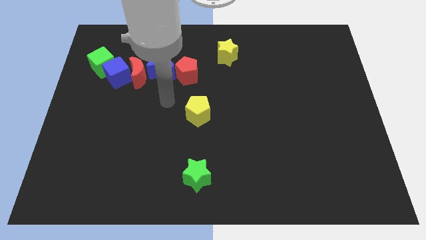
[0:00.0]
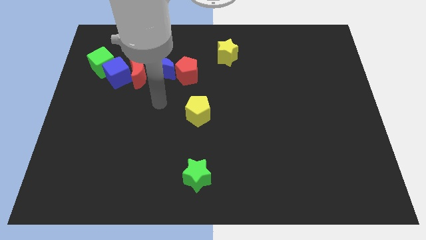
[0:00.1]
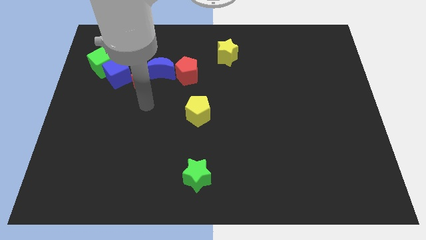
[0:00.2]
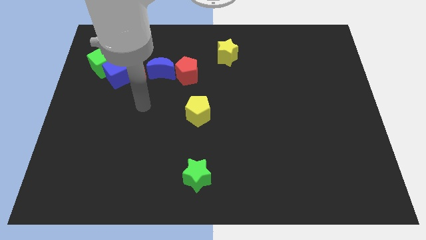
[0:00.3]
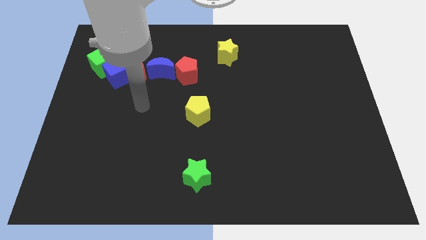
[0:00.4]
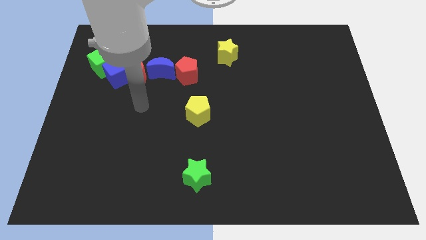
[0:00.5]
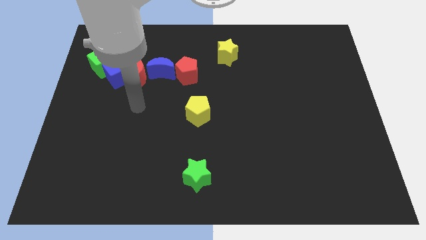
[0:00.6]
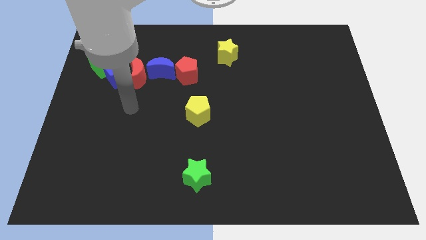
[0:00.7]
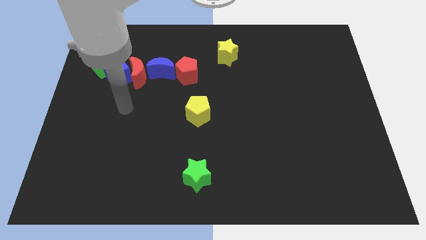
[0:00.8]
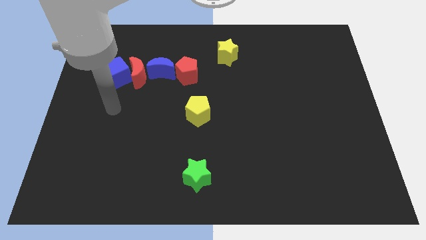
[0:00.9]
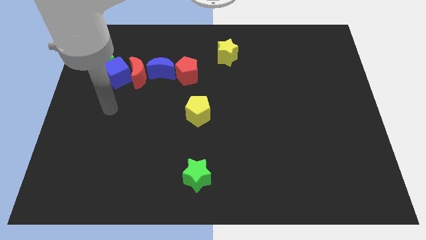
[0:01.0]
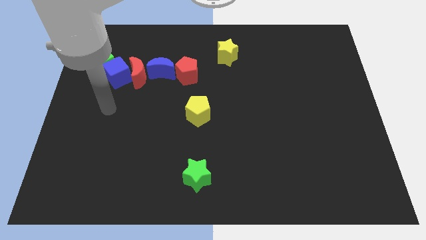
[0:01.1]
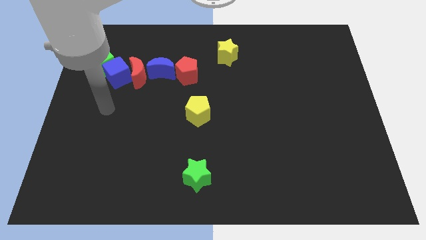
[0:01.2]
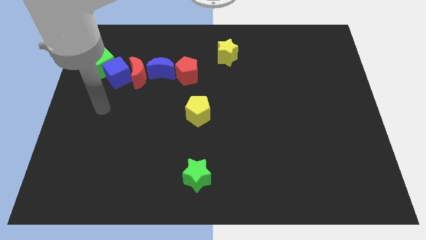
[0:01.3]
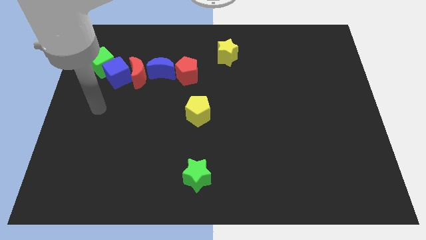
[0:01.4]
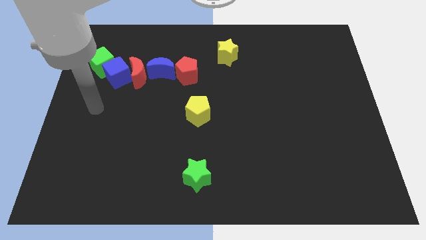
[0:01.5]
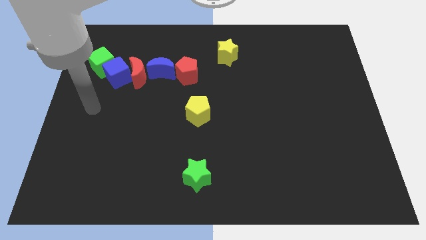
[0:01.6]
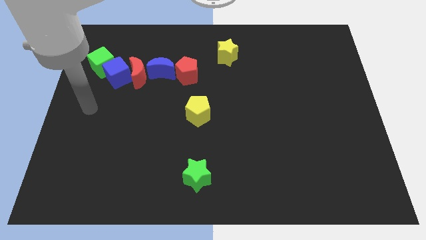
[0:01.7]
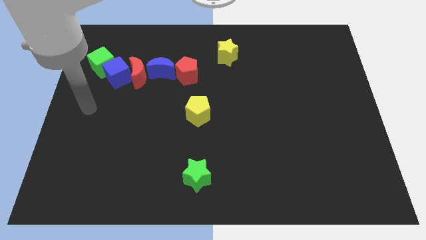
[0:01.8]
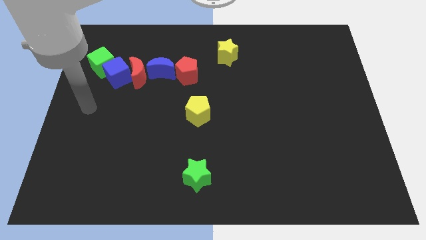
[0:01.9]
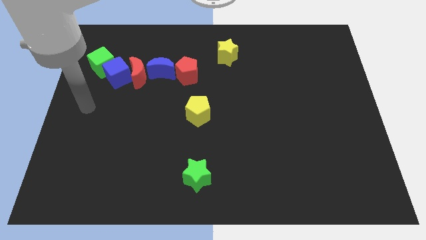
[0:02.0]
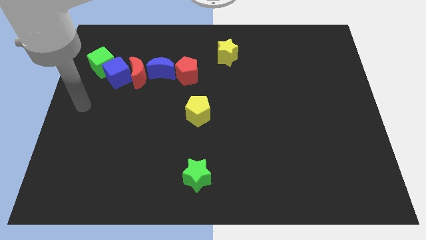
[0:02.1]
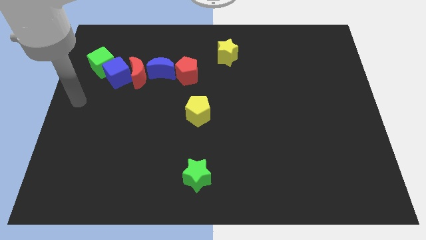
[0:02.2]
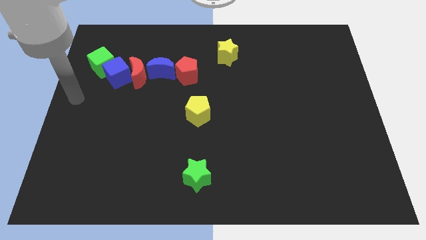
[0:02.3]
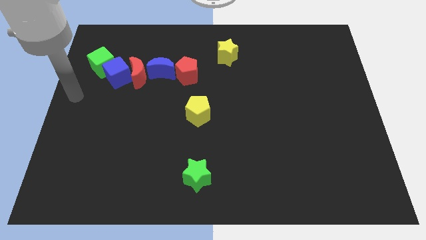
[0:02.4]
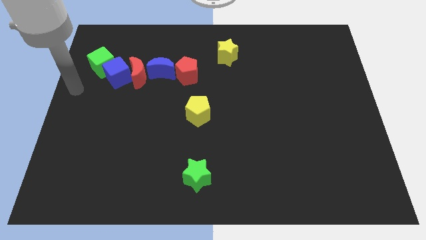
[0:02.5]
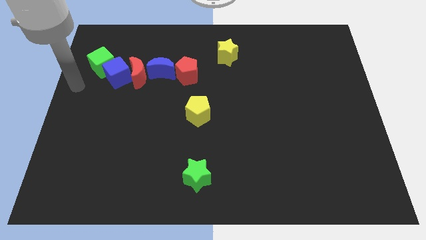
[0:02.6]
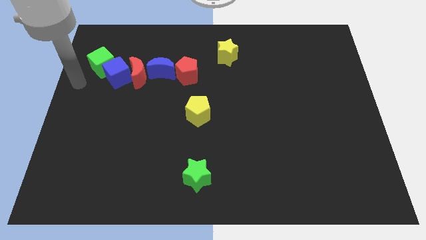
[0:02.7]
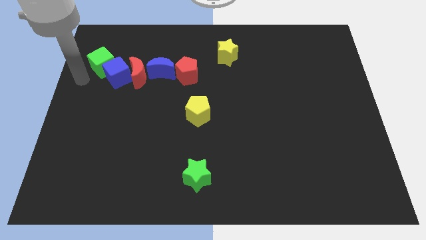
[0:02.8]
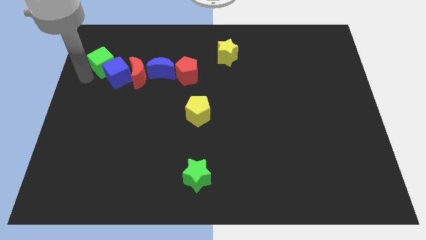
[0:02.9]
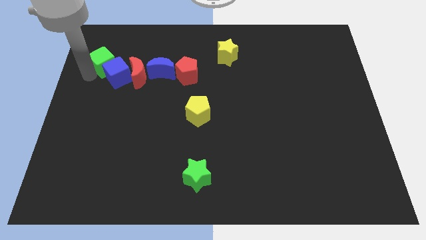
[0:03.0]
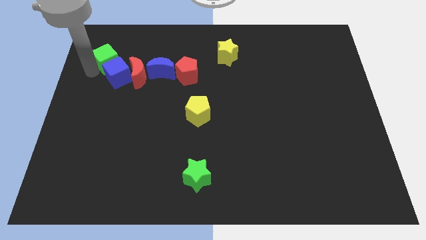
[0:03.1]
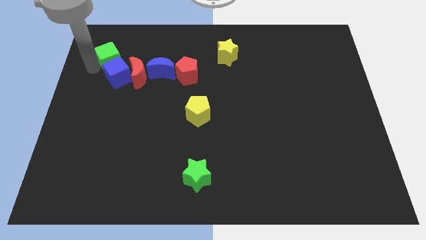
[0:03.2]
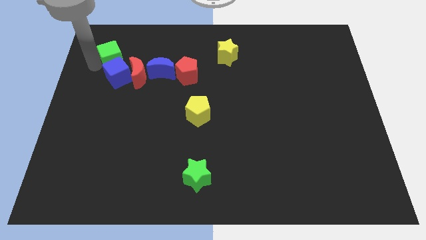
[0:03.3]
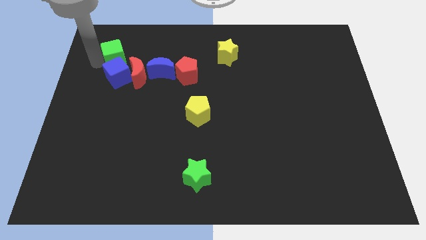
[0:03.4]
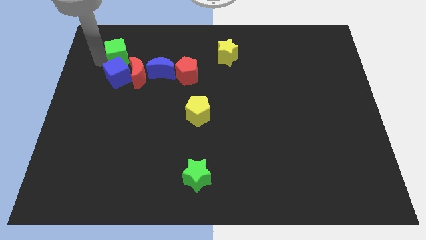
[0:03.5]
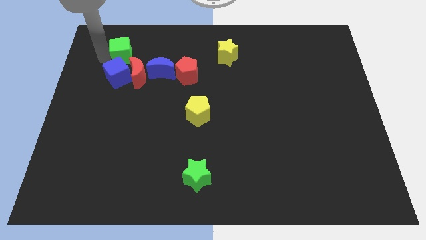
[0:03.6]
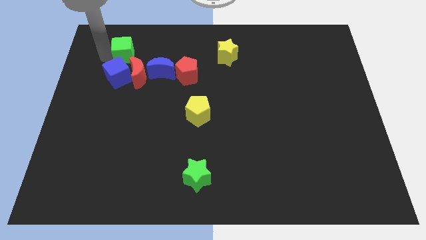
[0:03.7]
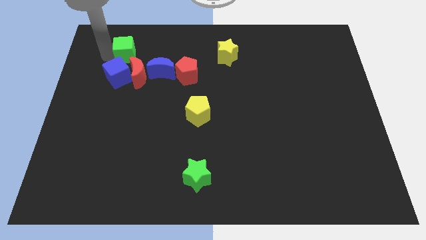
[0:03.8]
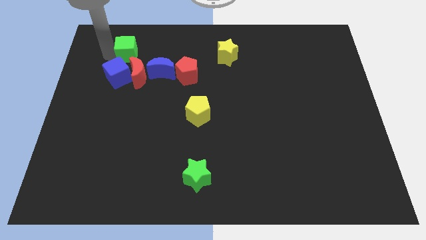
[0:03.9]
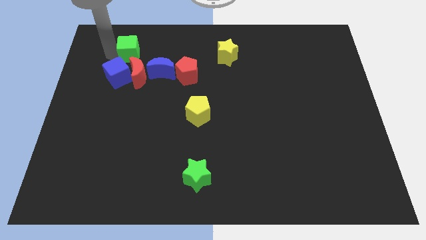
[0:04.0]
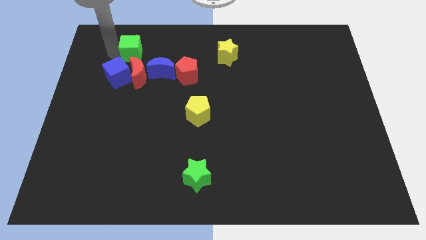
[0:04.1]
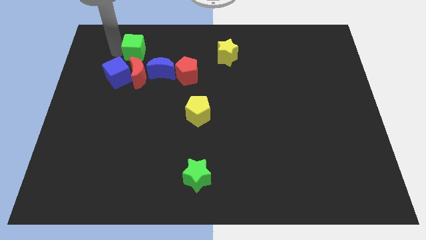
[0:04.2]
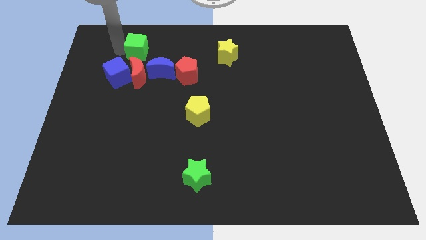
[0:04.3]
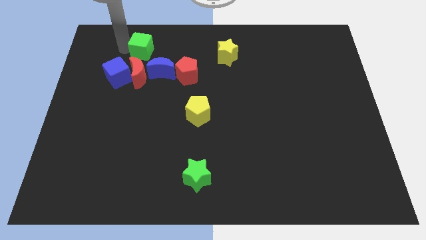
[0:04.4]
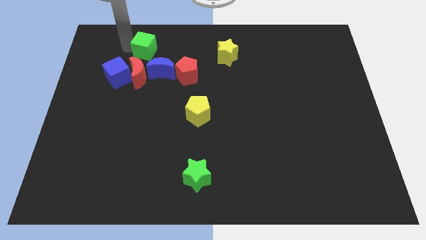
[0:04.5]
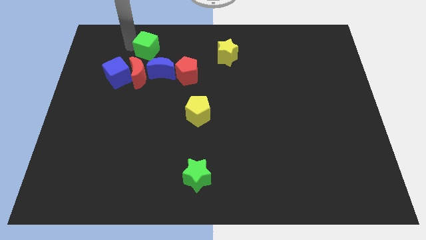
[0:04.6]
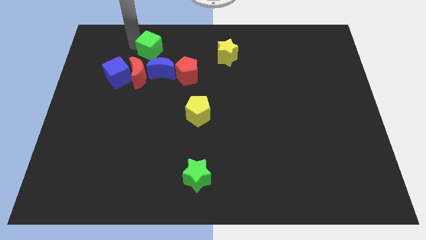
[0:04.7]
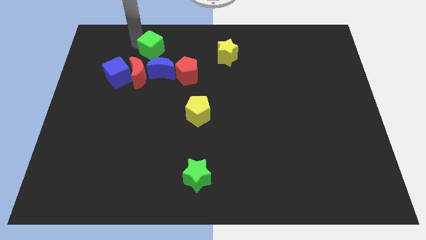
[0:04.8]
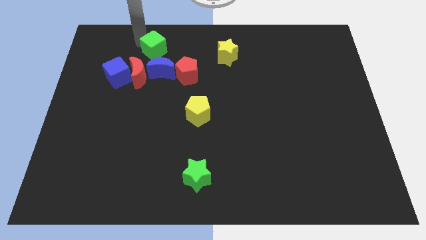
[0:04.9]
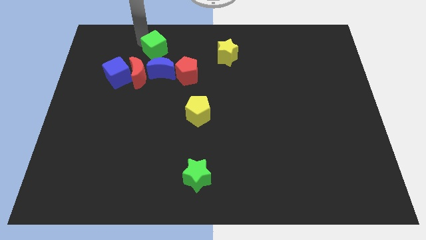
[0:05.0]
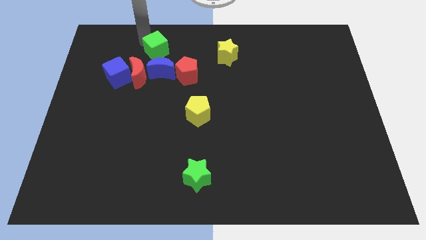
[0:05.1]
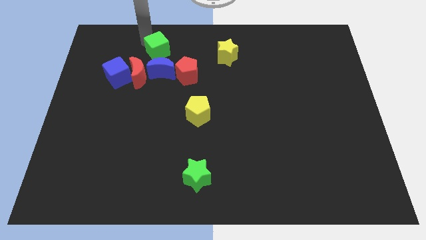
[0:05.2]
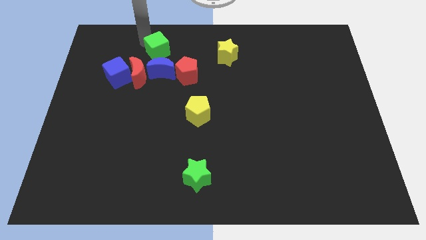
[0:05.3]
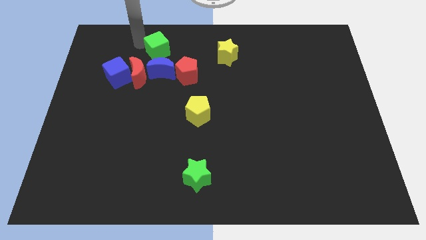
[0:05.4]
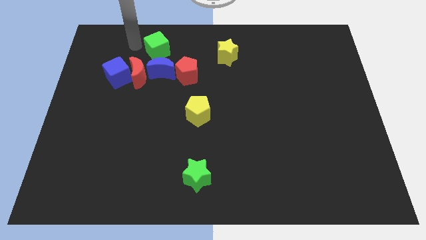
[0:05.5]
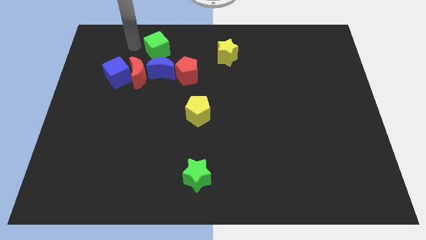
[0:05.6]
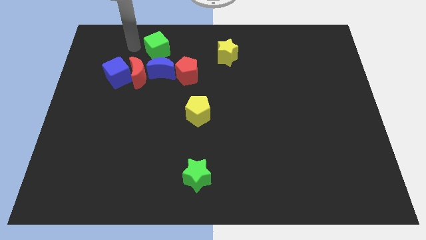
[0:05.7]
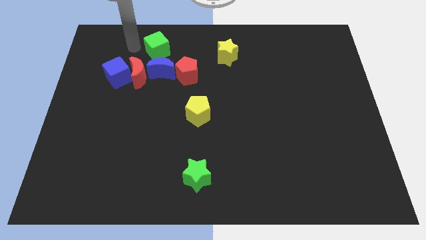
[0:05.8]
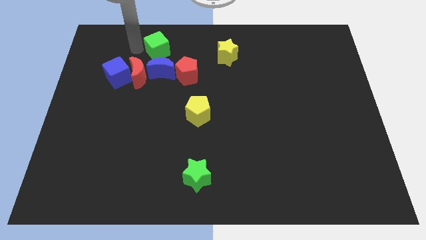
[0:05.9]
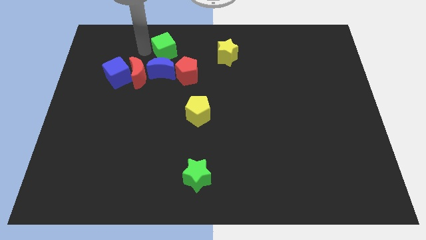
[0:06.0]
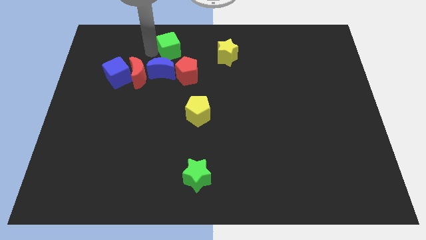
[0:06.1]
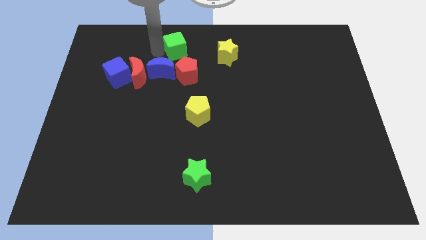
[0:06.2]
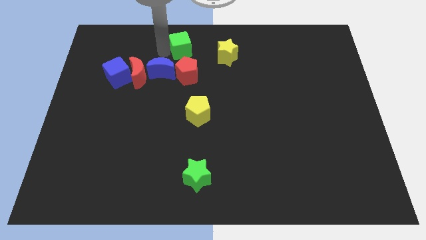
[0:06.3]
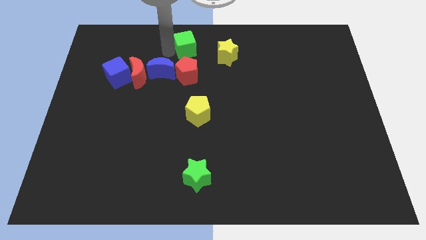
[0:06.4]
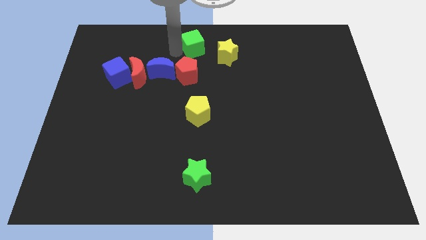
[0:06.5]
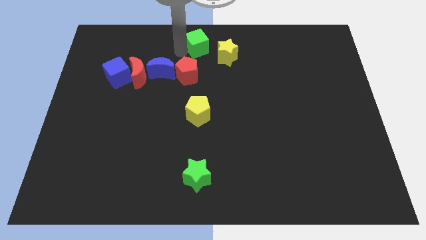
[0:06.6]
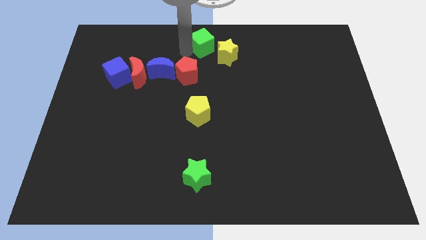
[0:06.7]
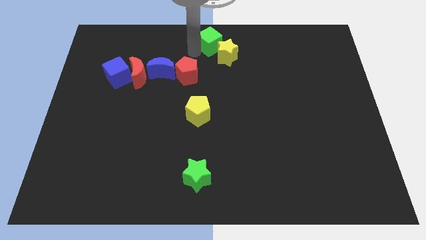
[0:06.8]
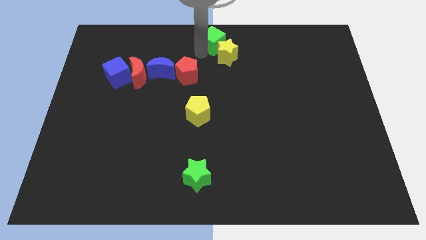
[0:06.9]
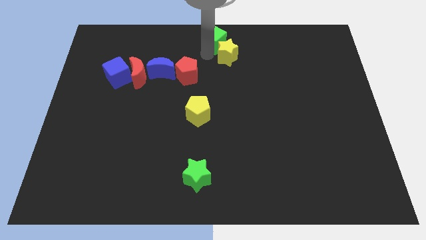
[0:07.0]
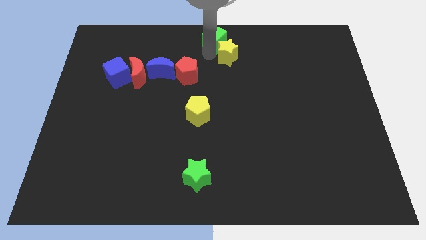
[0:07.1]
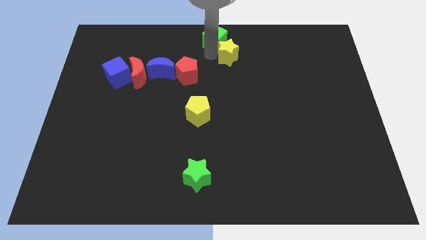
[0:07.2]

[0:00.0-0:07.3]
slide the green cube towards the top center

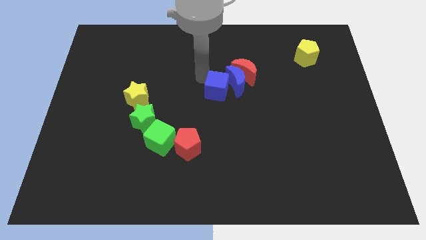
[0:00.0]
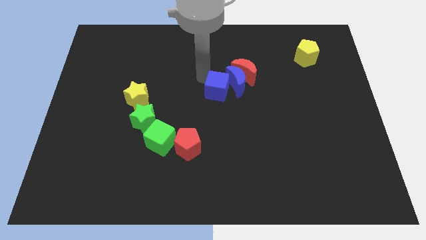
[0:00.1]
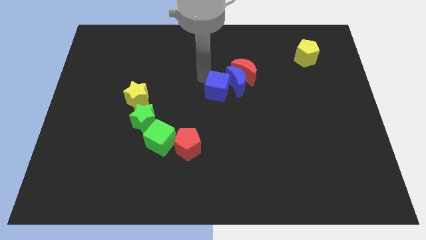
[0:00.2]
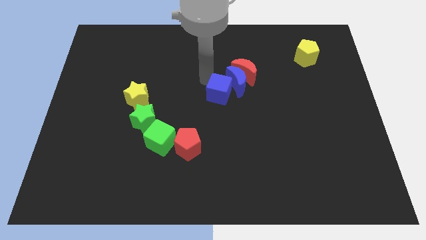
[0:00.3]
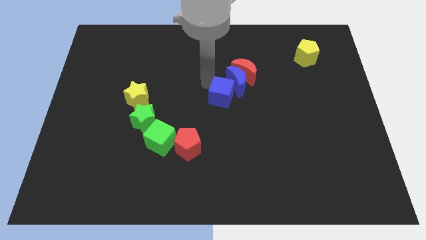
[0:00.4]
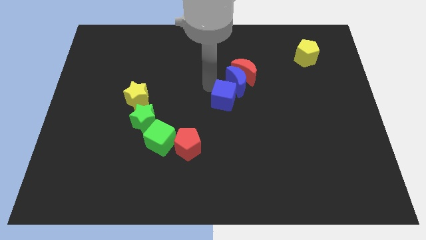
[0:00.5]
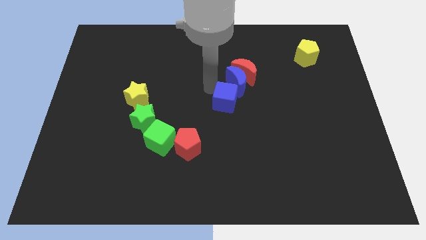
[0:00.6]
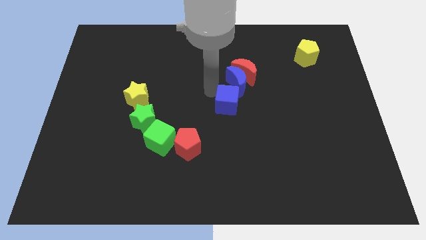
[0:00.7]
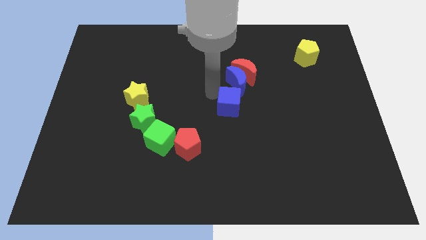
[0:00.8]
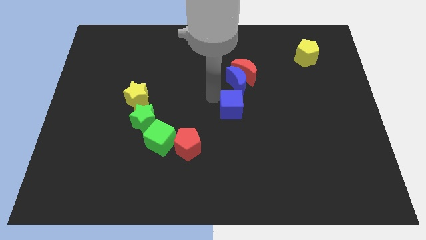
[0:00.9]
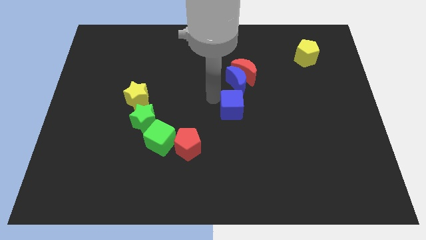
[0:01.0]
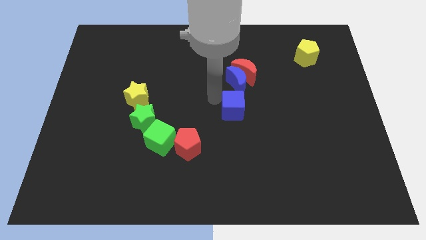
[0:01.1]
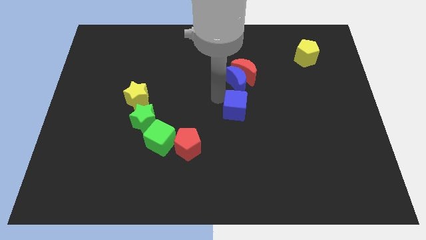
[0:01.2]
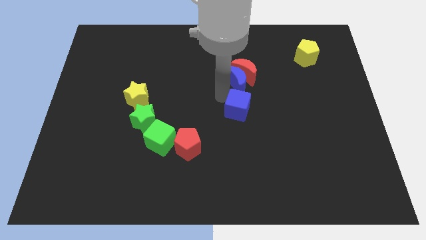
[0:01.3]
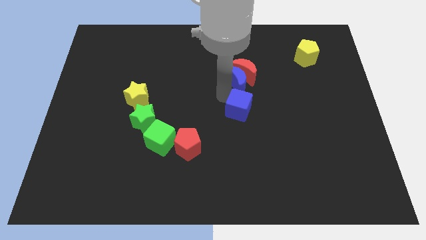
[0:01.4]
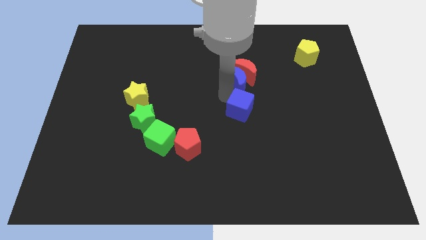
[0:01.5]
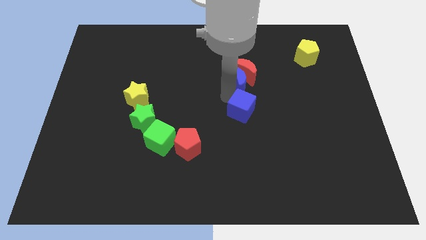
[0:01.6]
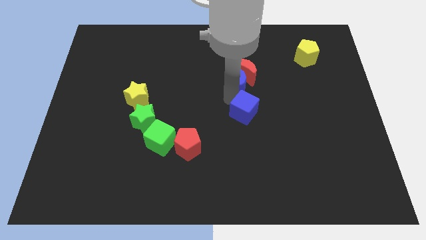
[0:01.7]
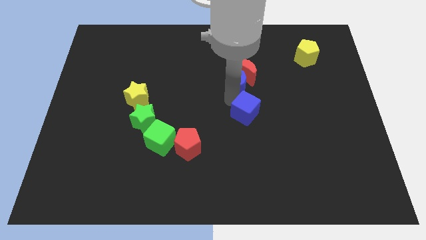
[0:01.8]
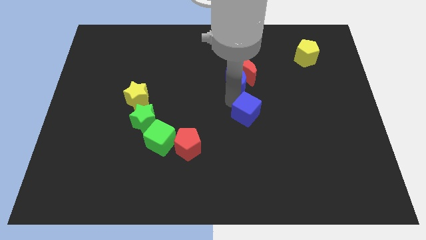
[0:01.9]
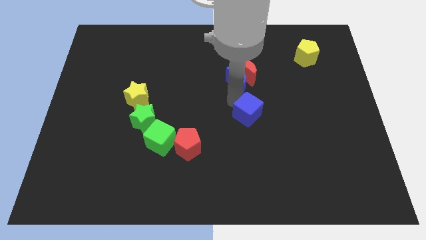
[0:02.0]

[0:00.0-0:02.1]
drag the blue cube below the blue moon
